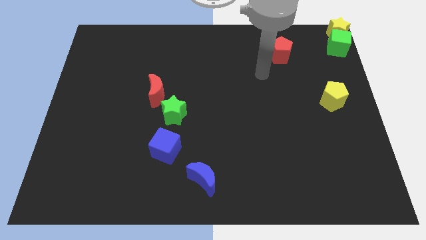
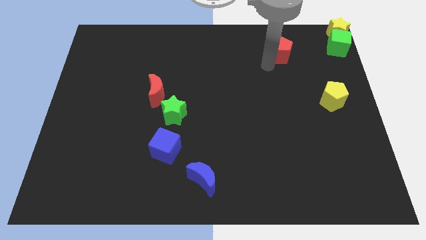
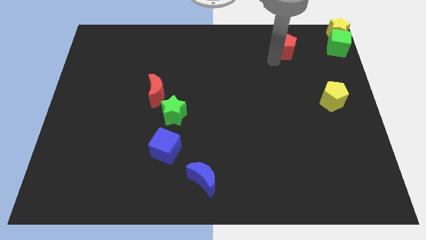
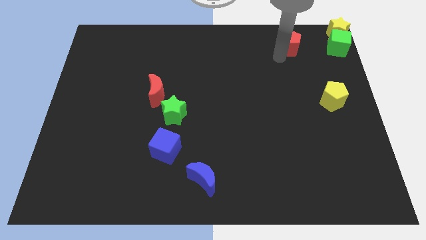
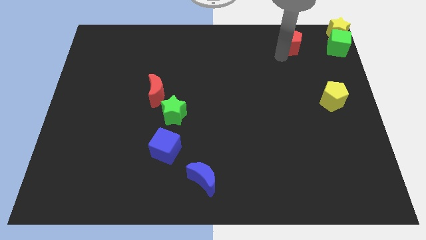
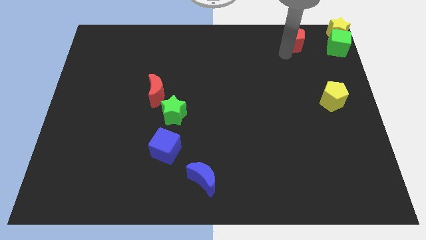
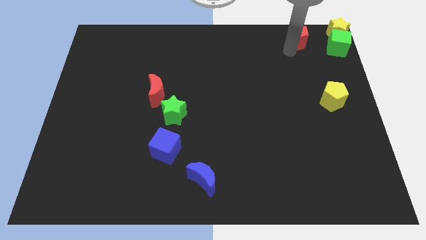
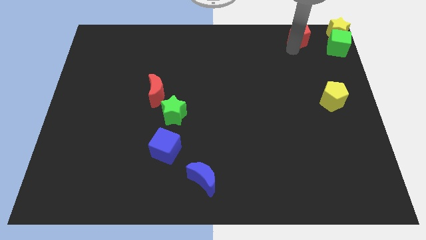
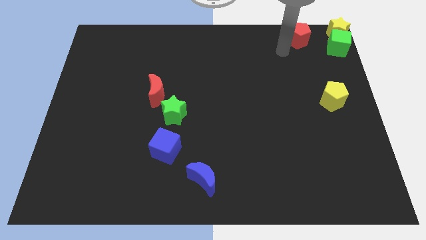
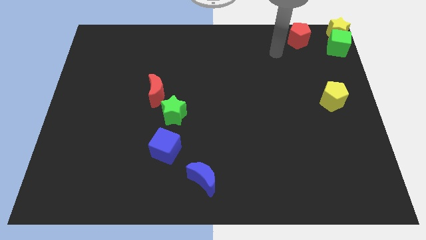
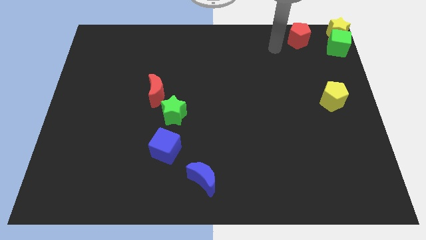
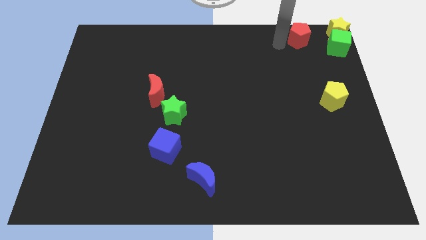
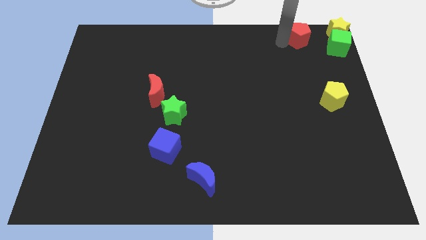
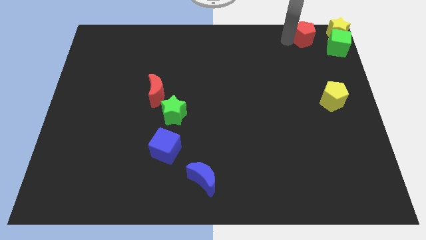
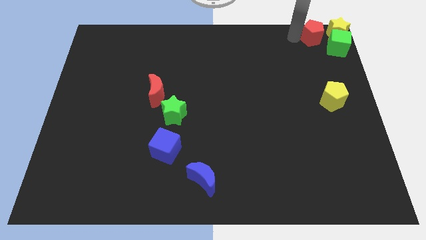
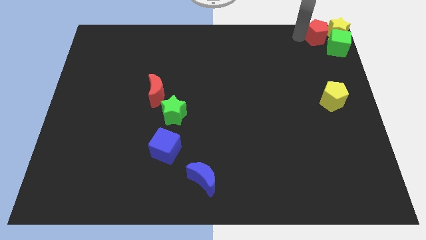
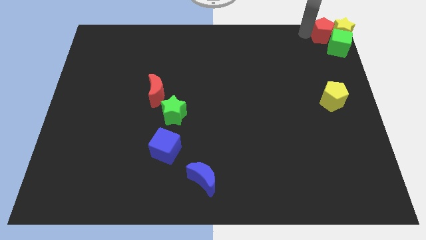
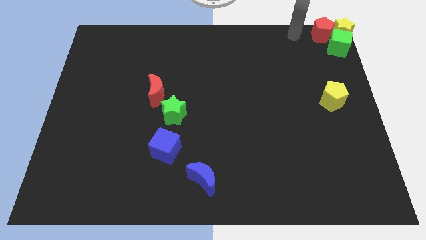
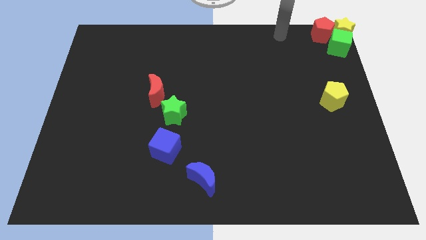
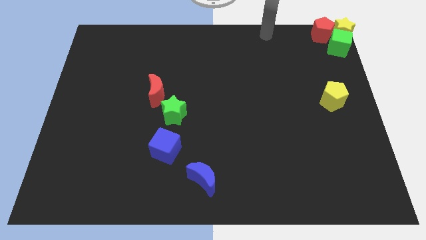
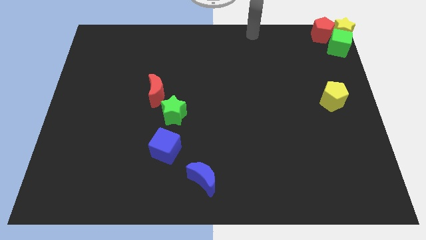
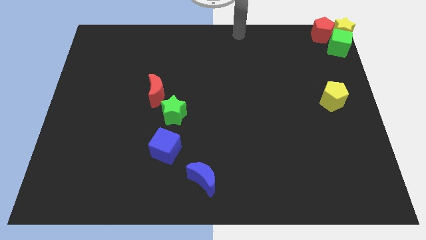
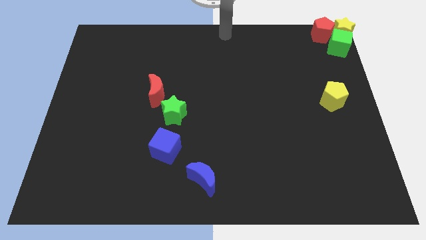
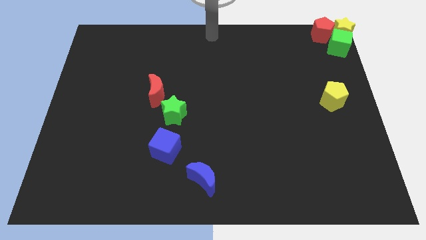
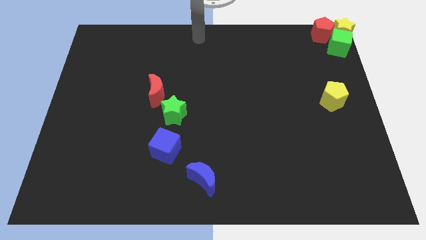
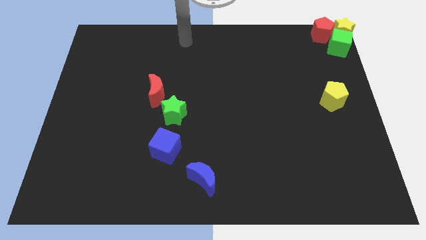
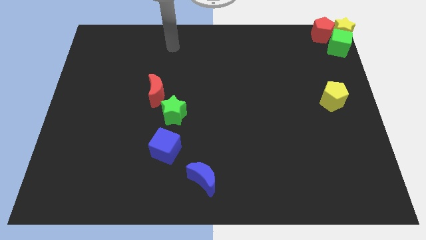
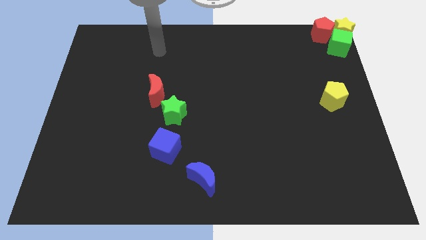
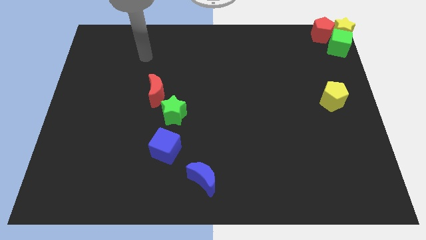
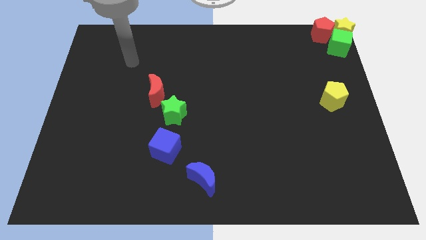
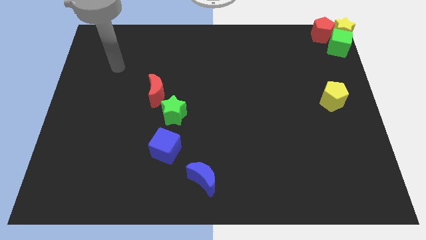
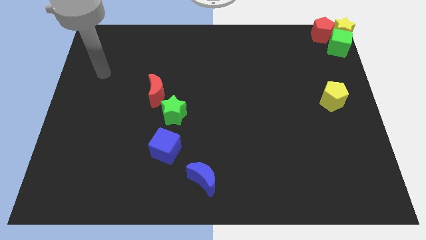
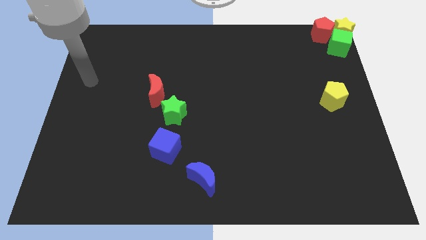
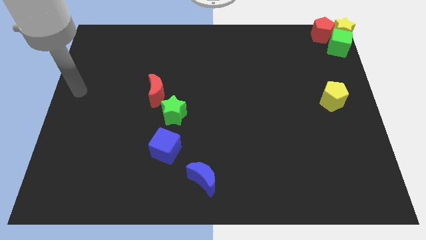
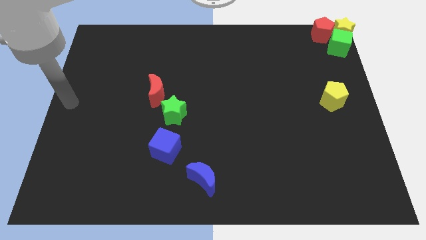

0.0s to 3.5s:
push the red pentagon into the left side of the yellow star

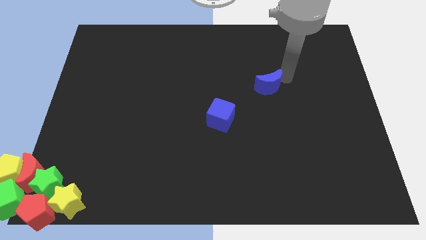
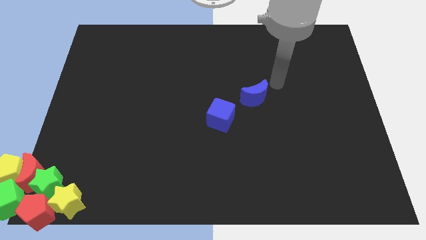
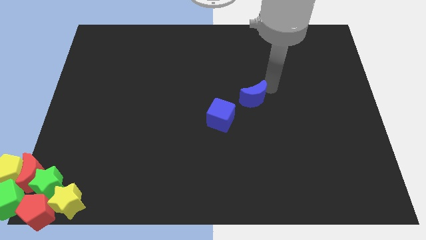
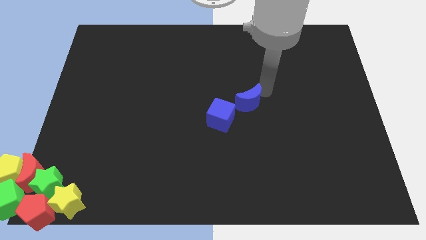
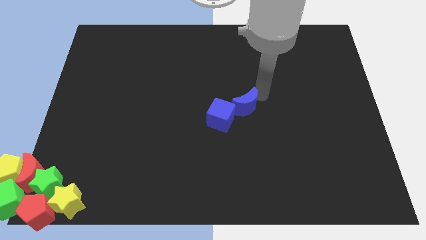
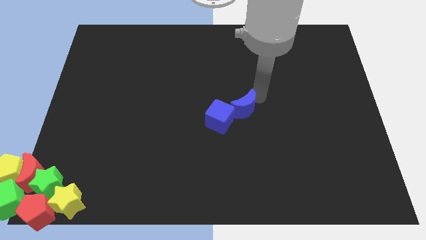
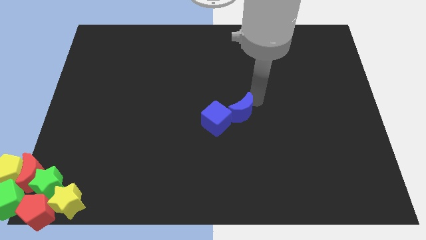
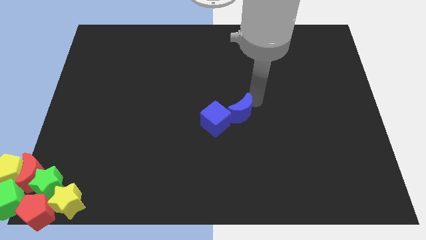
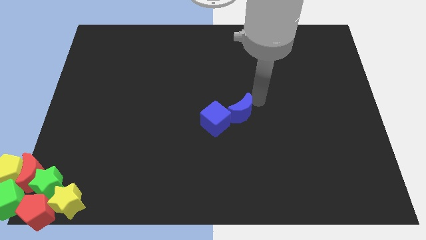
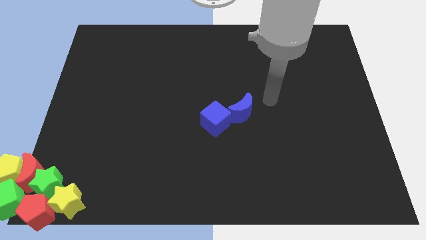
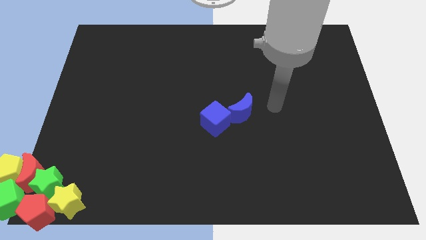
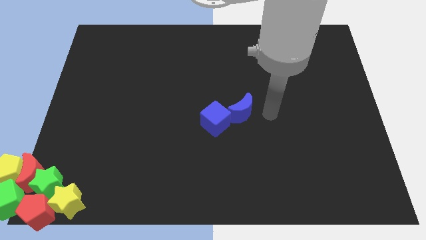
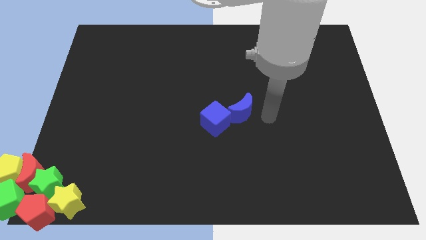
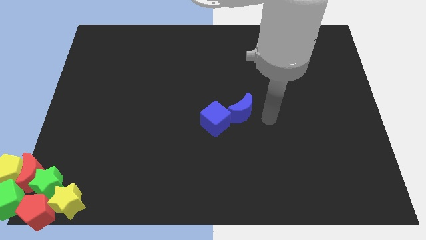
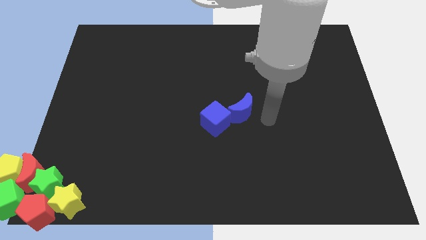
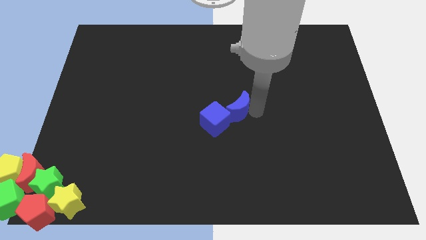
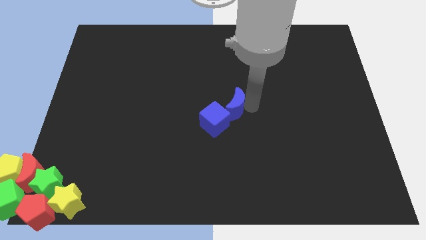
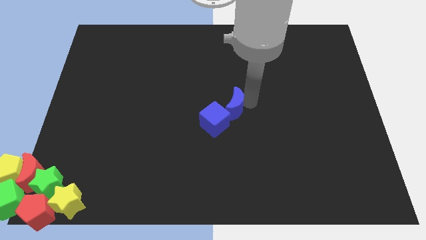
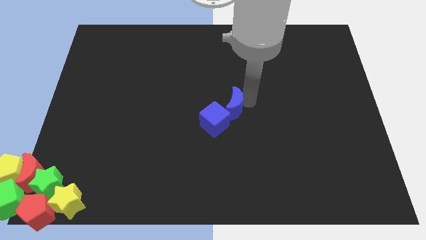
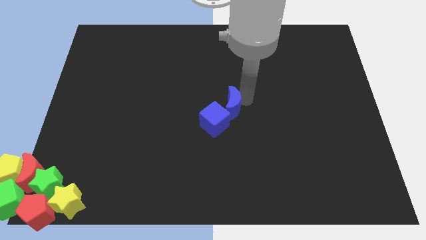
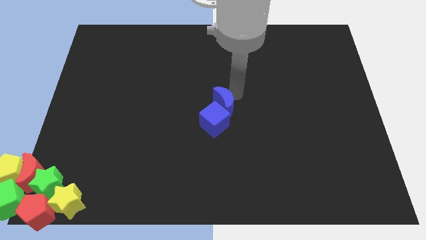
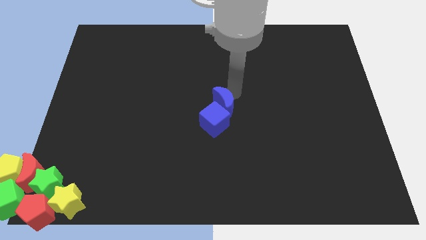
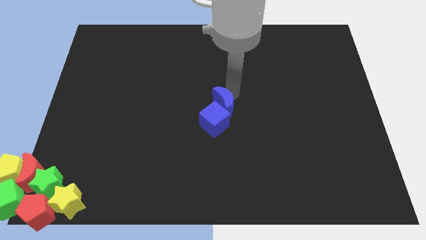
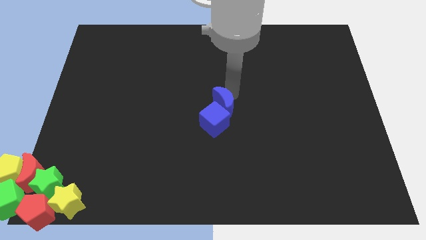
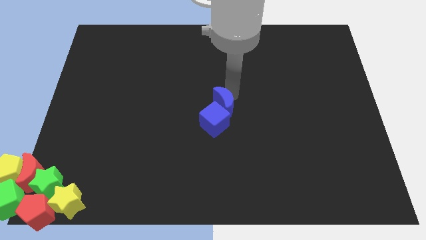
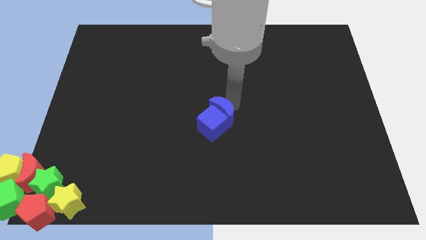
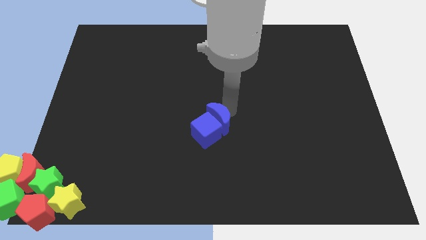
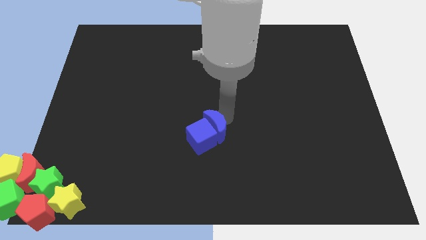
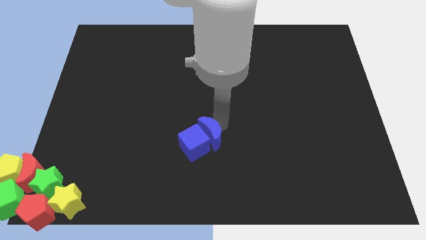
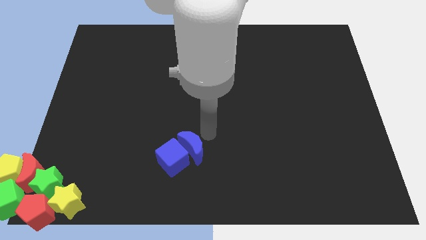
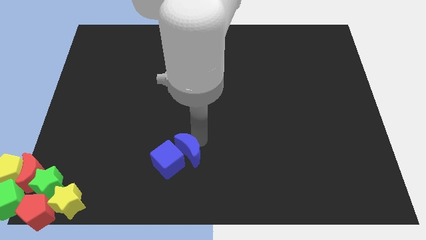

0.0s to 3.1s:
push the group of blue blocks towards the group of blocks

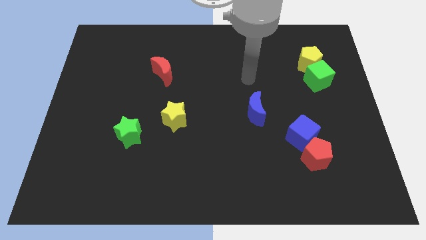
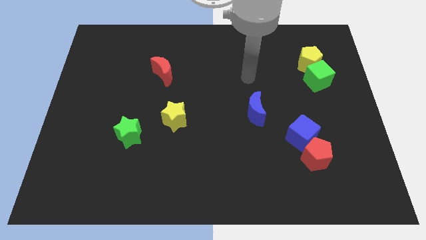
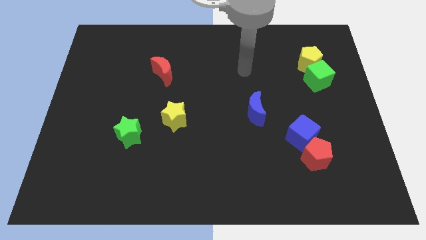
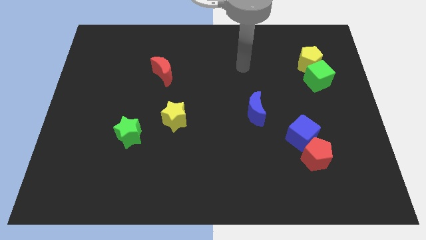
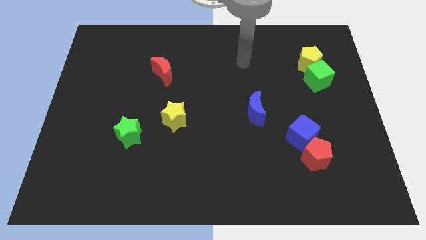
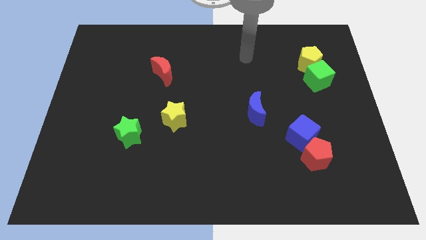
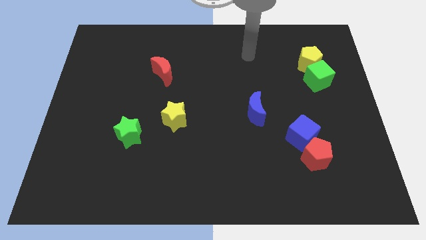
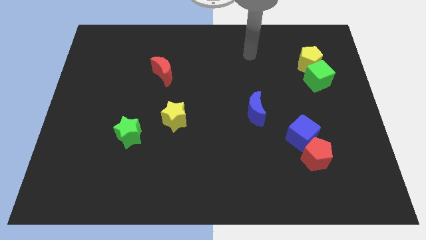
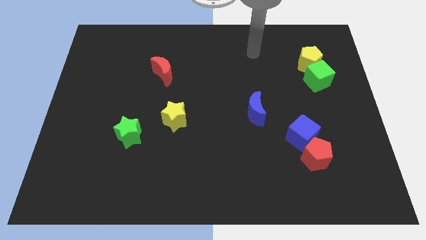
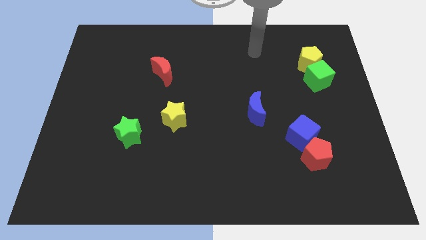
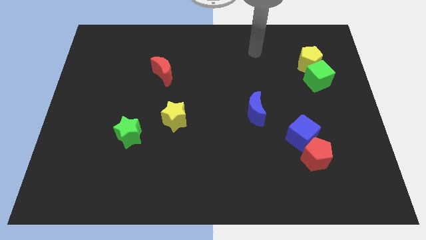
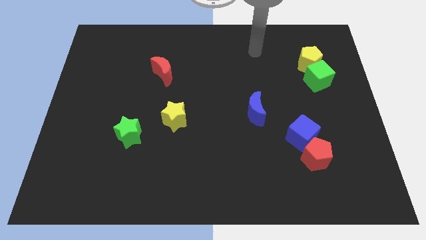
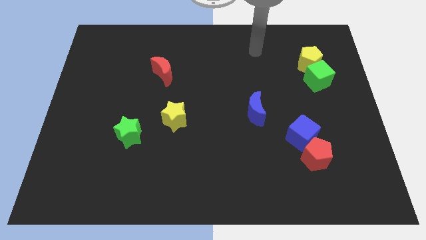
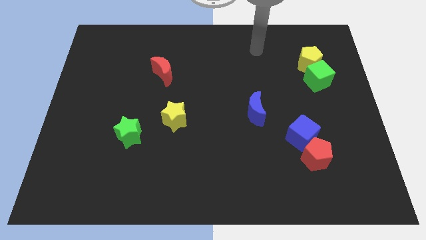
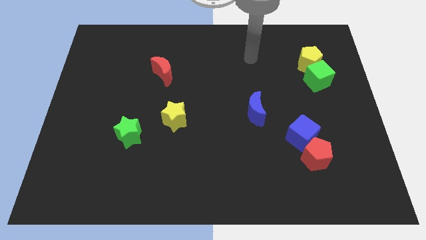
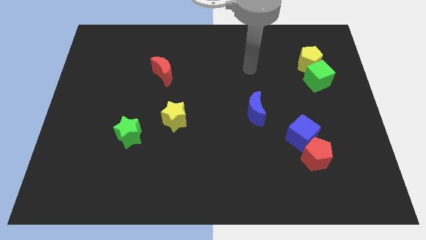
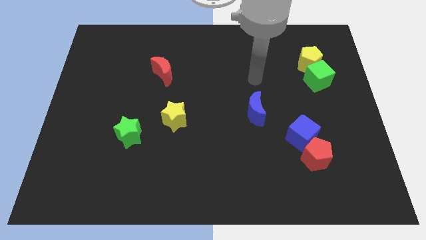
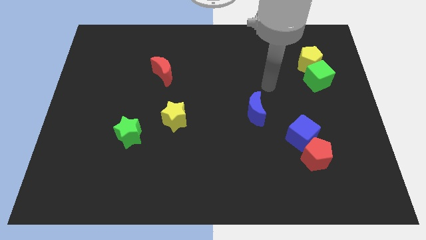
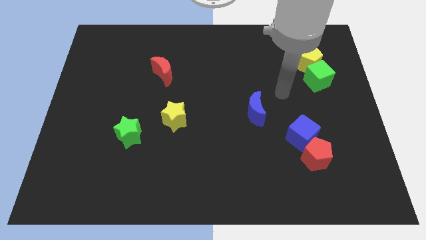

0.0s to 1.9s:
place the arm in between the green cube and blue crescent

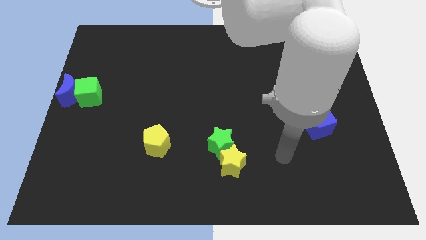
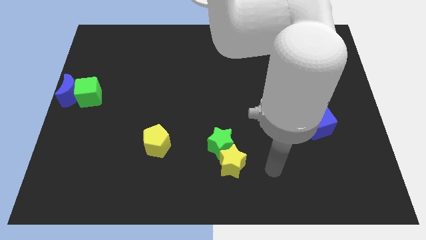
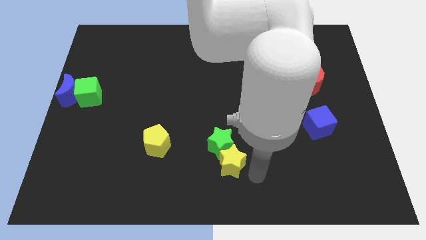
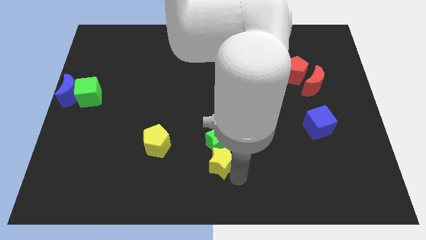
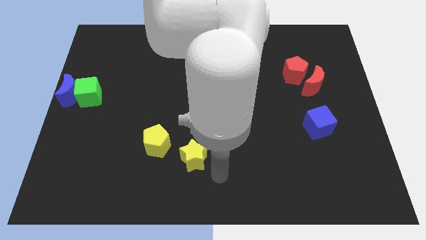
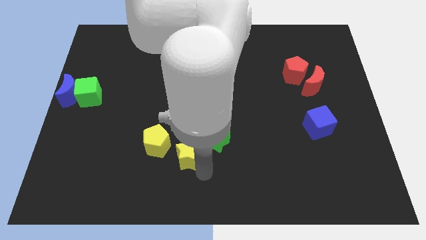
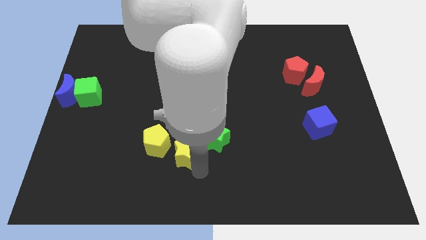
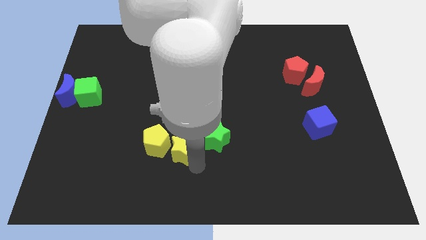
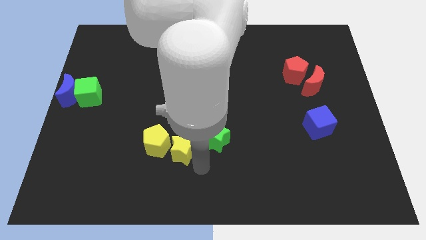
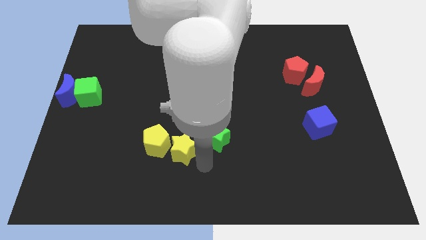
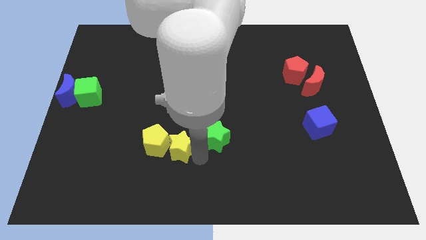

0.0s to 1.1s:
separate the yellow star from the green star
